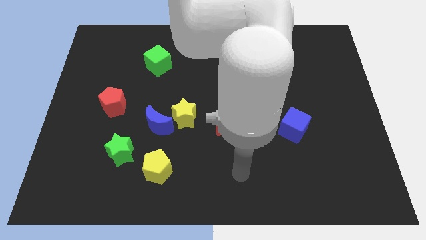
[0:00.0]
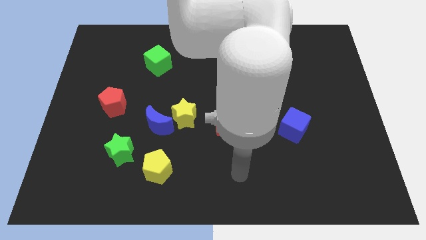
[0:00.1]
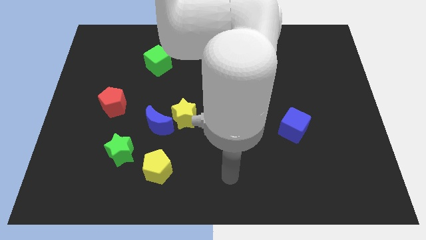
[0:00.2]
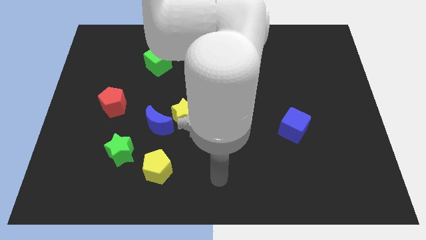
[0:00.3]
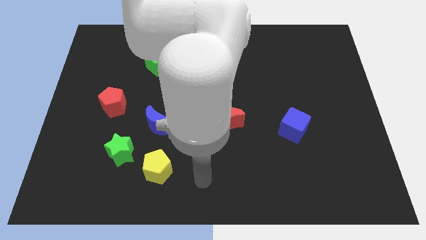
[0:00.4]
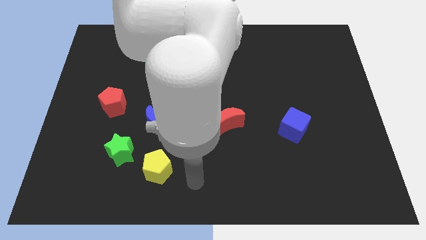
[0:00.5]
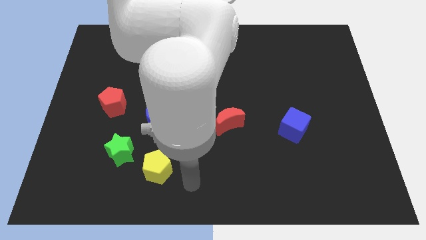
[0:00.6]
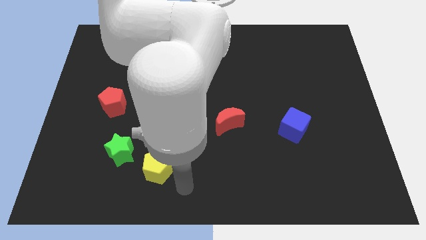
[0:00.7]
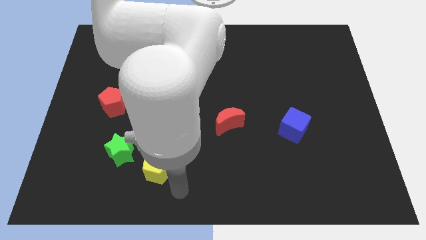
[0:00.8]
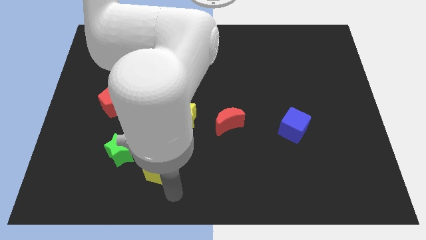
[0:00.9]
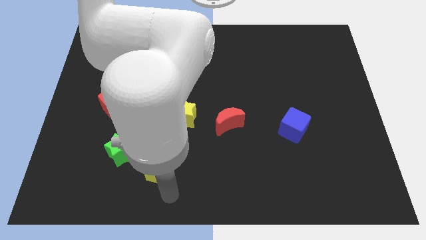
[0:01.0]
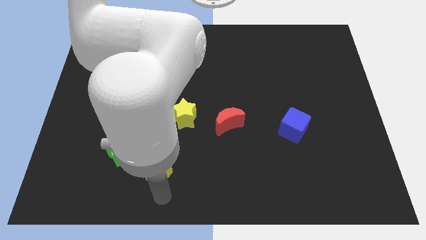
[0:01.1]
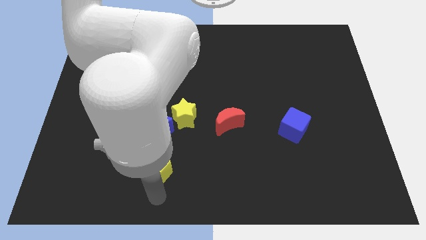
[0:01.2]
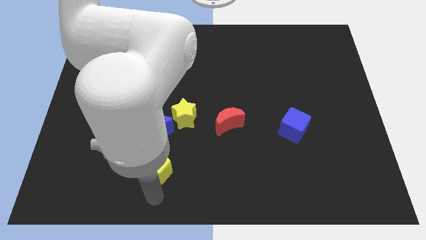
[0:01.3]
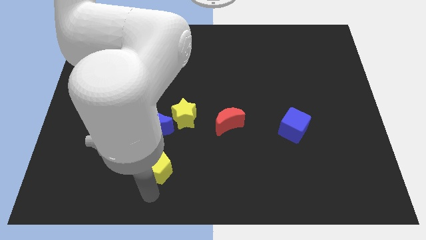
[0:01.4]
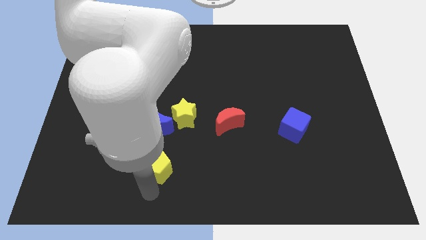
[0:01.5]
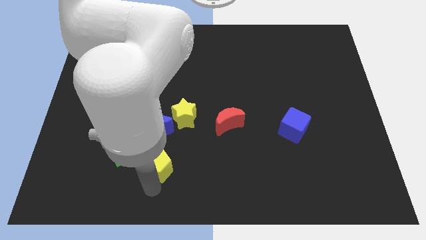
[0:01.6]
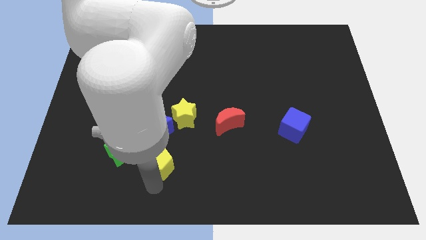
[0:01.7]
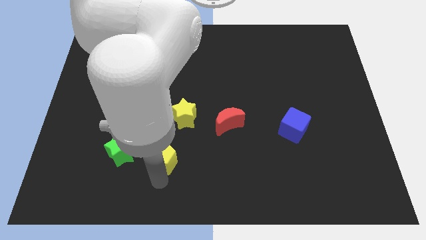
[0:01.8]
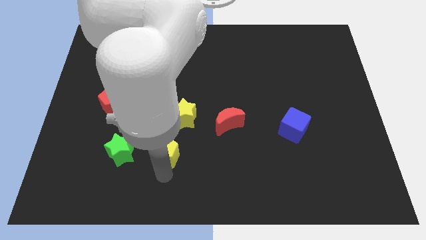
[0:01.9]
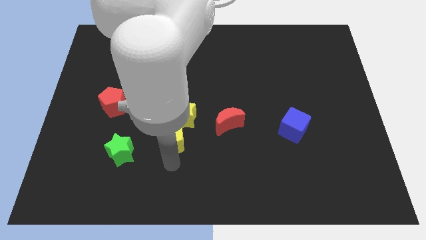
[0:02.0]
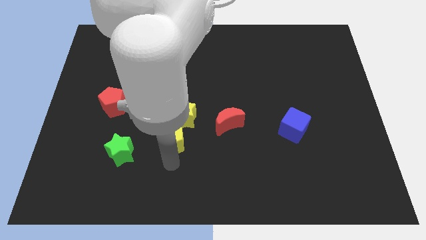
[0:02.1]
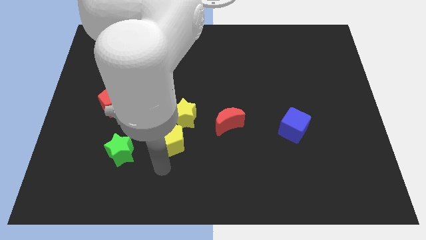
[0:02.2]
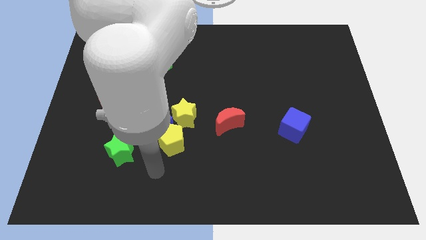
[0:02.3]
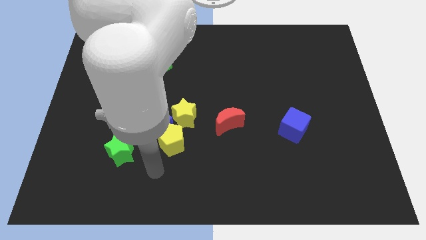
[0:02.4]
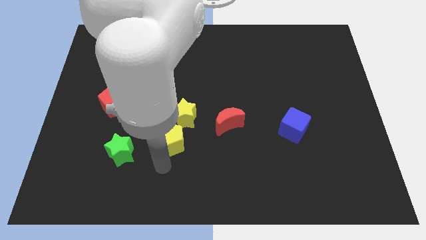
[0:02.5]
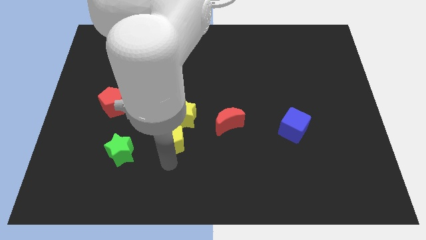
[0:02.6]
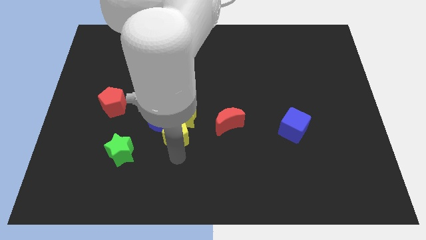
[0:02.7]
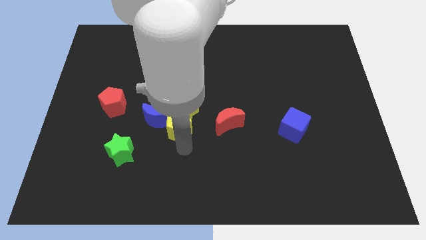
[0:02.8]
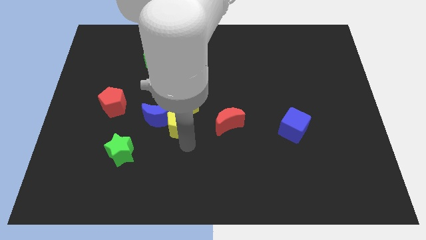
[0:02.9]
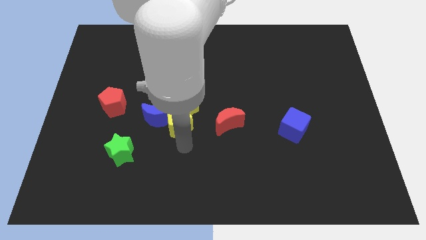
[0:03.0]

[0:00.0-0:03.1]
move yellow pentagon into the yellow star

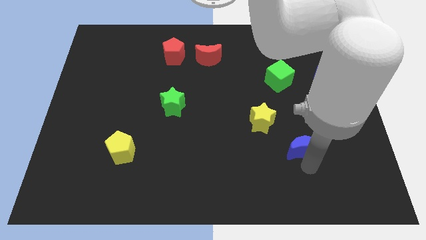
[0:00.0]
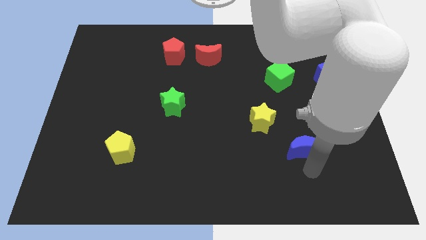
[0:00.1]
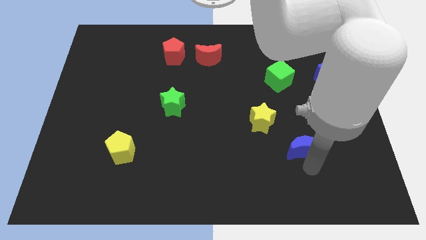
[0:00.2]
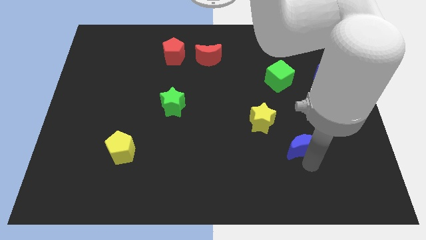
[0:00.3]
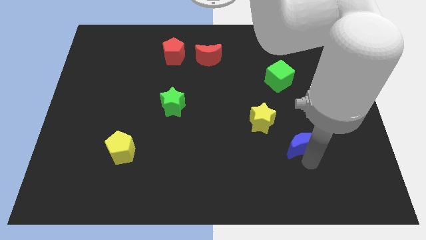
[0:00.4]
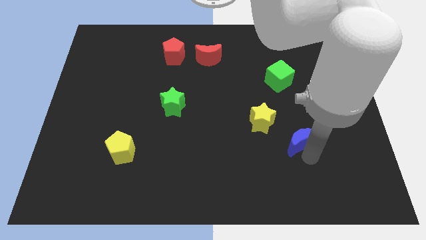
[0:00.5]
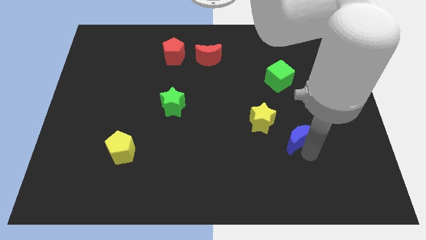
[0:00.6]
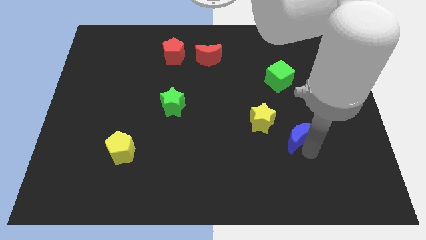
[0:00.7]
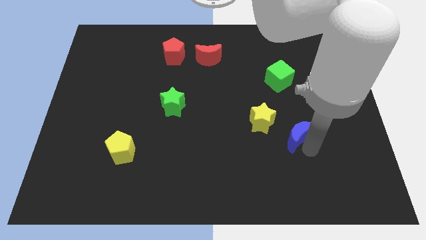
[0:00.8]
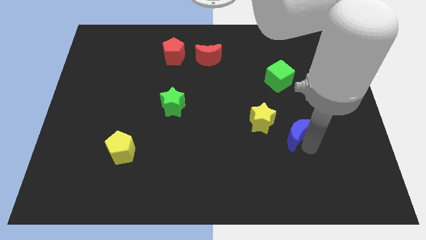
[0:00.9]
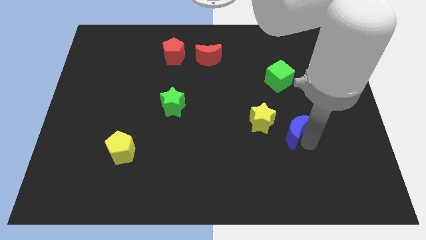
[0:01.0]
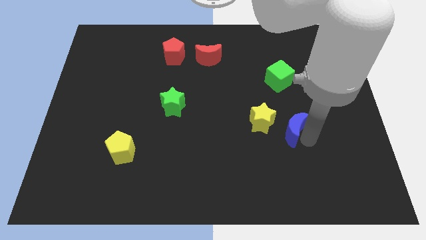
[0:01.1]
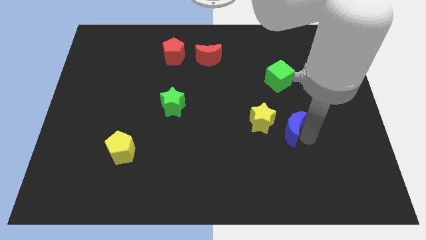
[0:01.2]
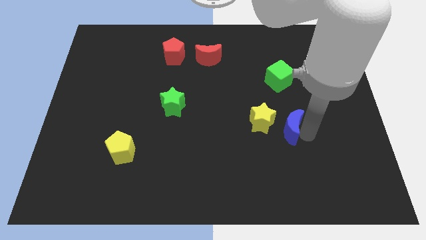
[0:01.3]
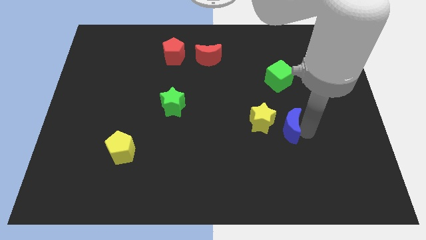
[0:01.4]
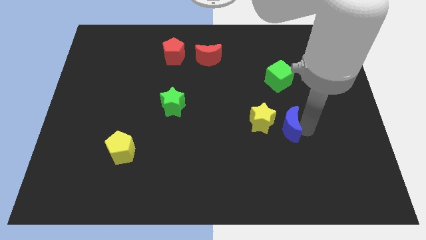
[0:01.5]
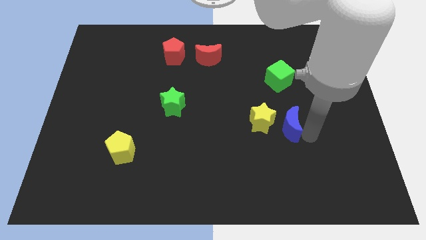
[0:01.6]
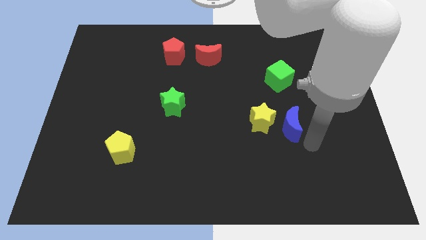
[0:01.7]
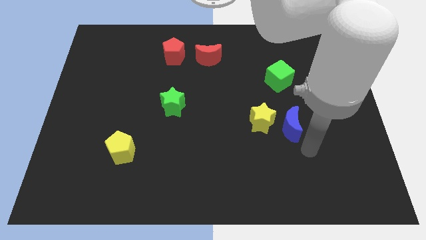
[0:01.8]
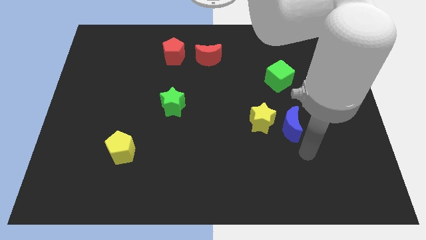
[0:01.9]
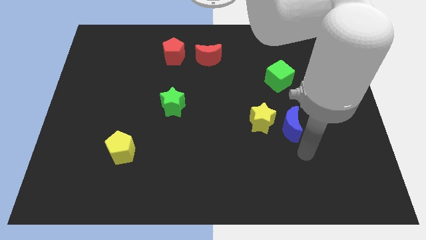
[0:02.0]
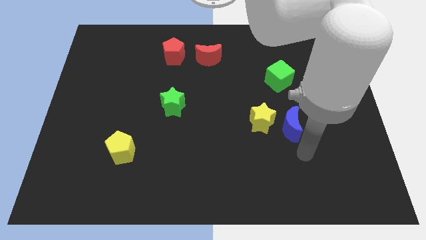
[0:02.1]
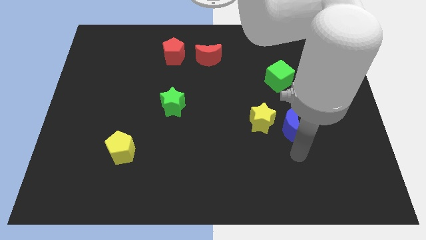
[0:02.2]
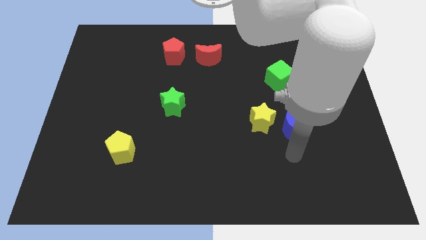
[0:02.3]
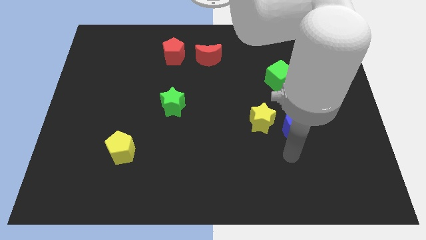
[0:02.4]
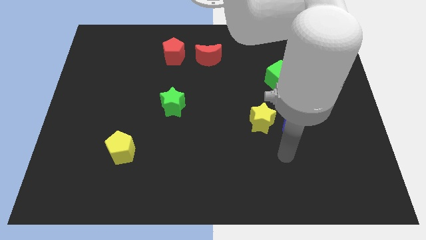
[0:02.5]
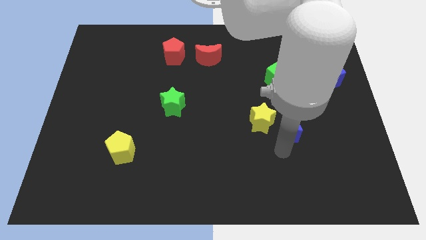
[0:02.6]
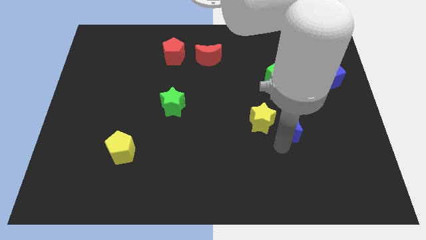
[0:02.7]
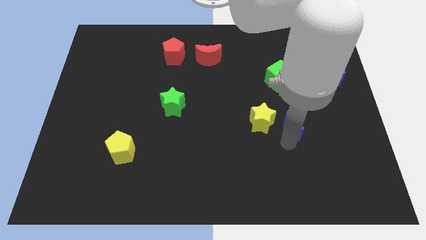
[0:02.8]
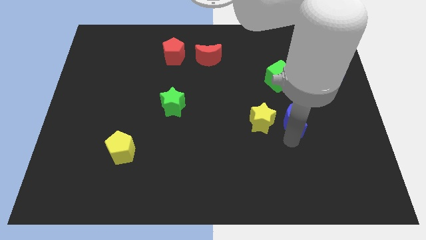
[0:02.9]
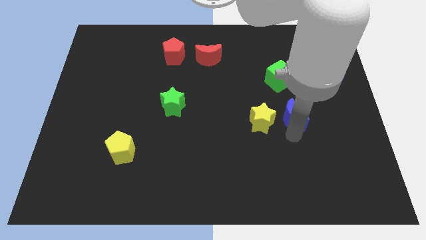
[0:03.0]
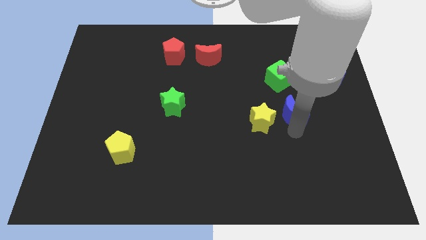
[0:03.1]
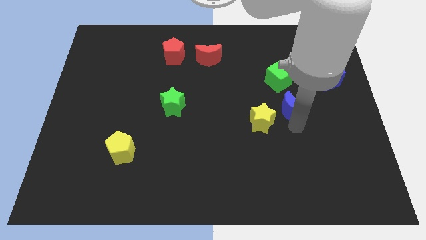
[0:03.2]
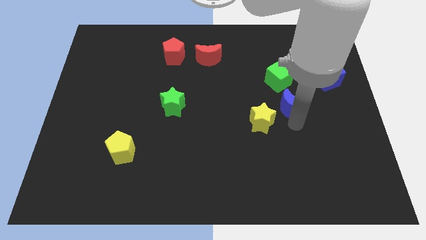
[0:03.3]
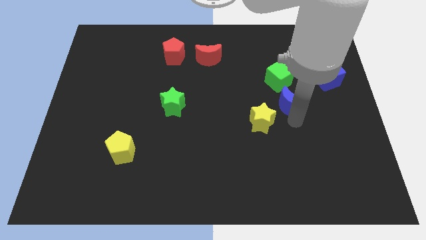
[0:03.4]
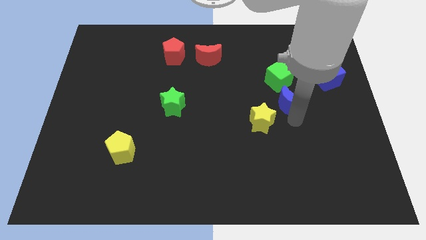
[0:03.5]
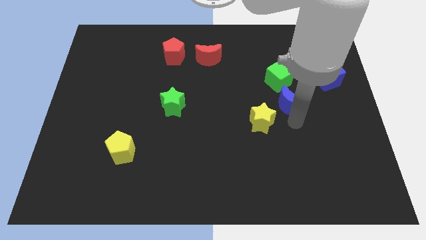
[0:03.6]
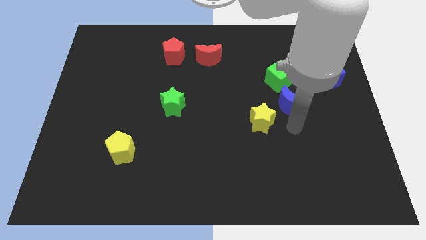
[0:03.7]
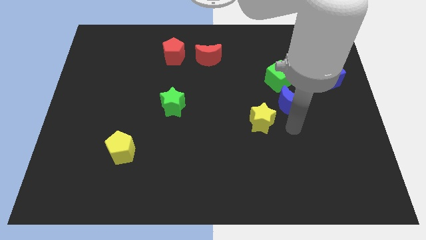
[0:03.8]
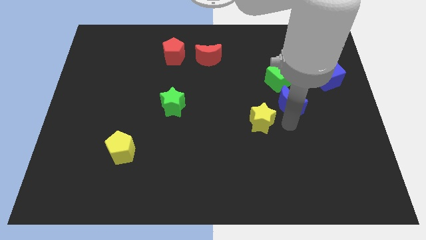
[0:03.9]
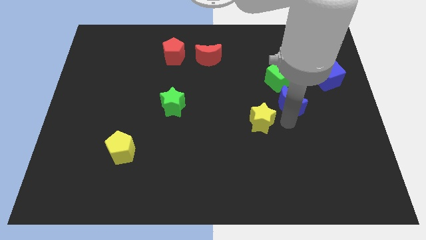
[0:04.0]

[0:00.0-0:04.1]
push the blue crescent to the bottom of the green cube

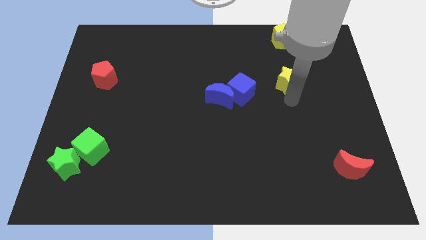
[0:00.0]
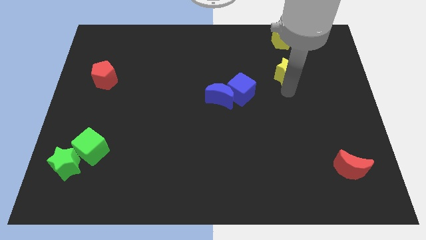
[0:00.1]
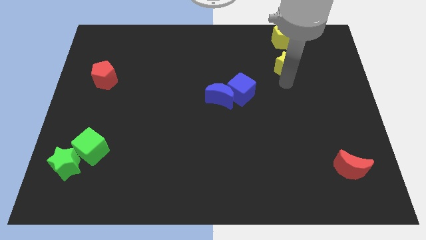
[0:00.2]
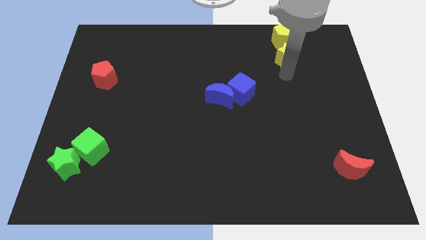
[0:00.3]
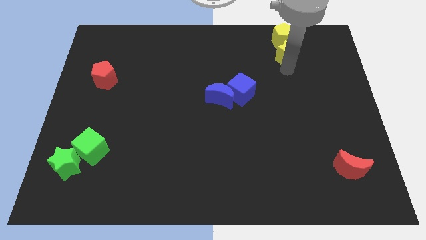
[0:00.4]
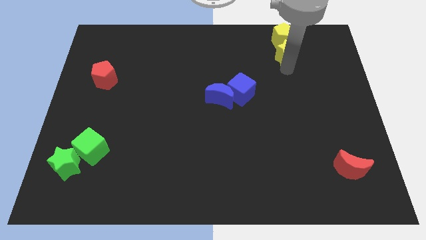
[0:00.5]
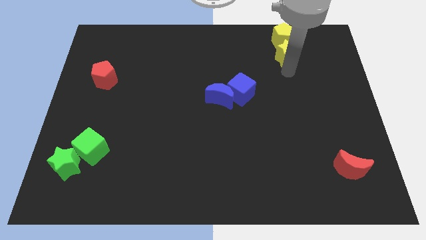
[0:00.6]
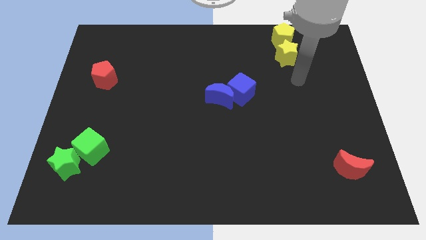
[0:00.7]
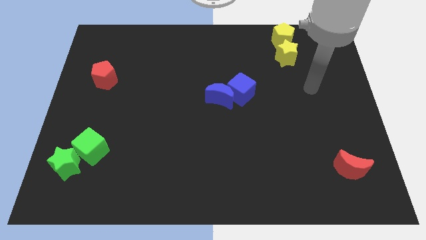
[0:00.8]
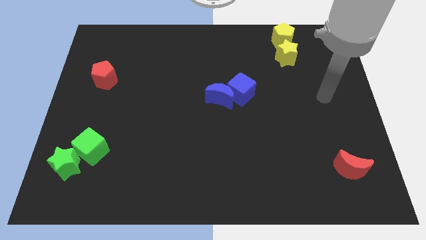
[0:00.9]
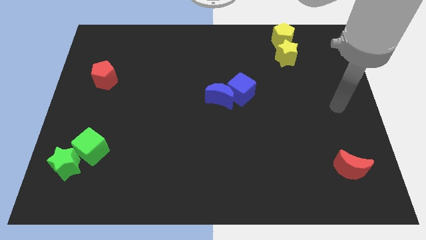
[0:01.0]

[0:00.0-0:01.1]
push the yellow star into the yellow pentagon

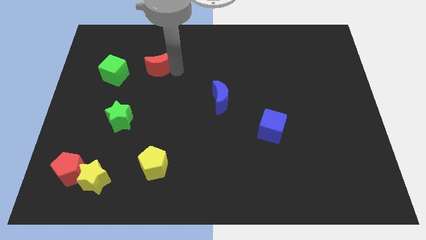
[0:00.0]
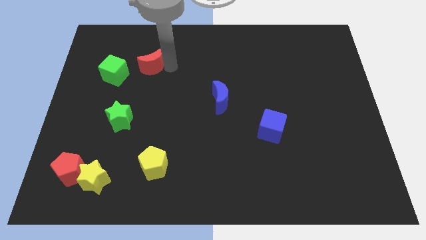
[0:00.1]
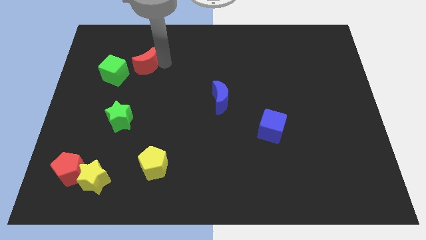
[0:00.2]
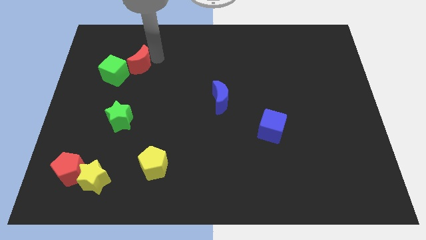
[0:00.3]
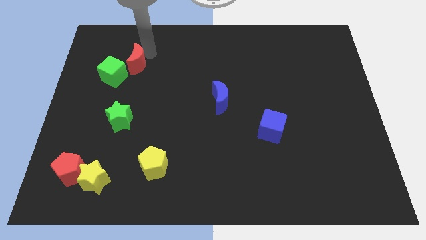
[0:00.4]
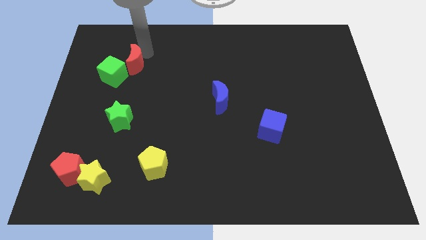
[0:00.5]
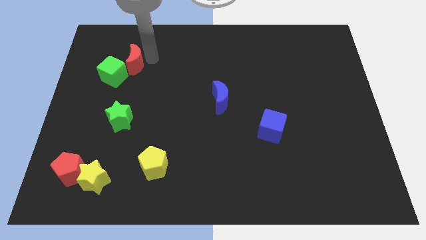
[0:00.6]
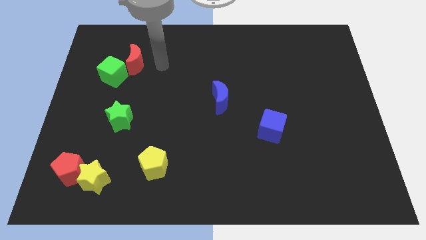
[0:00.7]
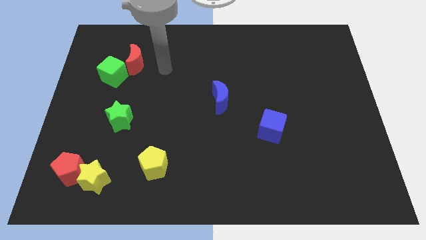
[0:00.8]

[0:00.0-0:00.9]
push the red moon into the green cube
